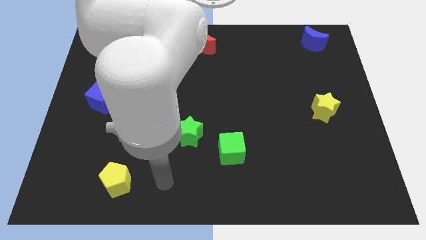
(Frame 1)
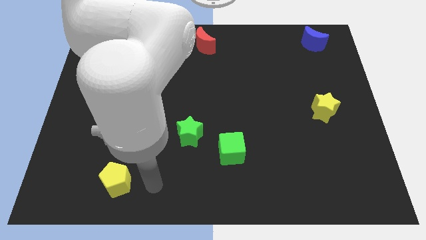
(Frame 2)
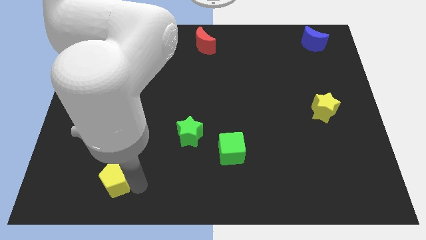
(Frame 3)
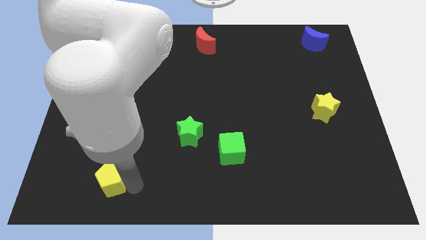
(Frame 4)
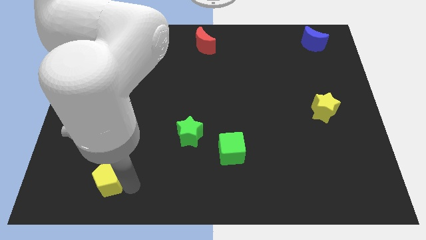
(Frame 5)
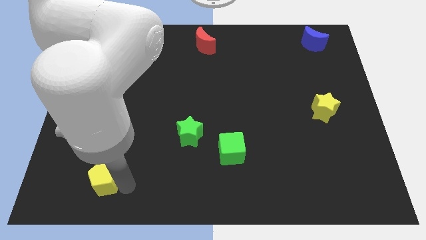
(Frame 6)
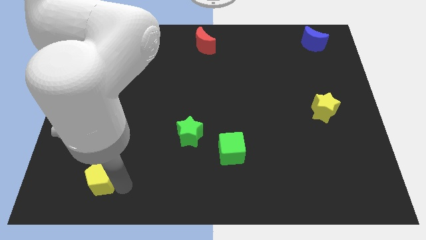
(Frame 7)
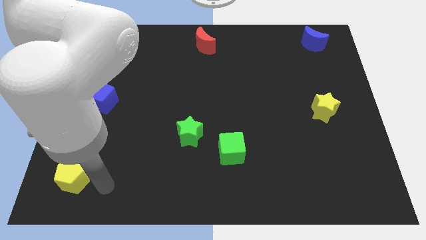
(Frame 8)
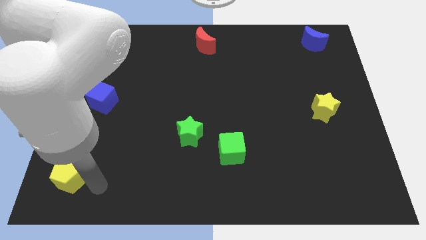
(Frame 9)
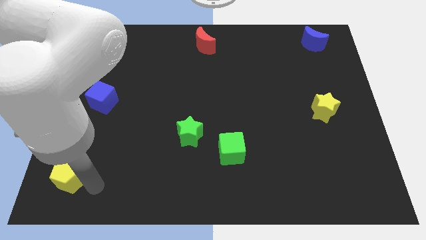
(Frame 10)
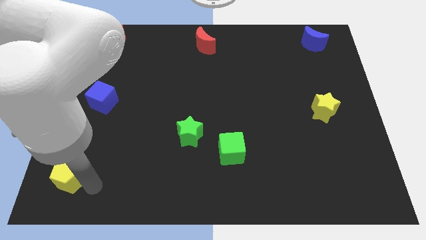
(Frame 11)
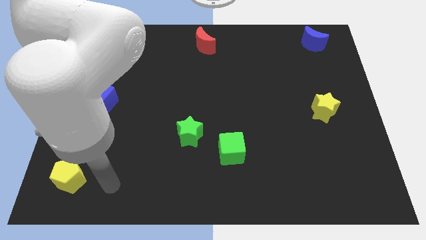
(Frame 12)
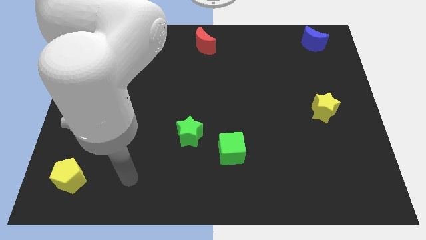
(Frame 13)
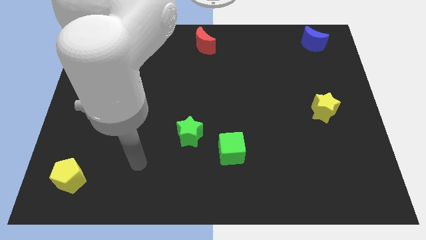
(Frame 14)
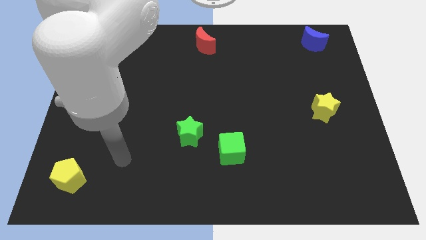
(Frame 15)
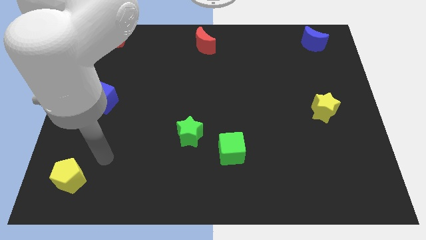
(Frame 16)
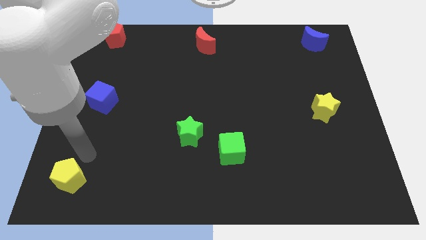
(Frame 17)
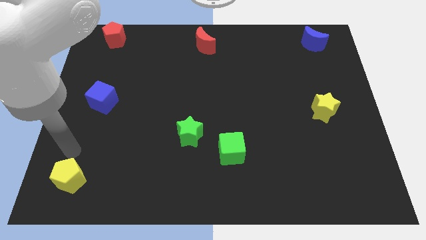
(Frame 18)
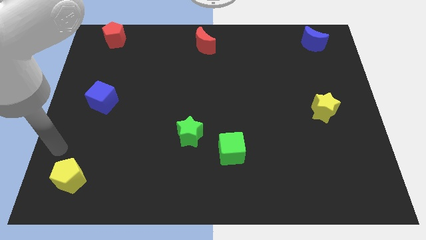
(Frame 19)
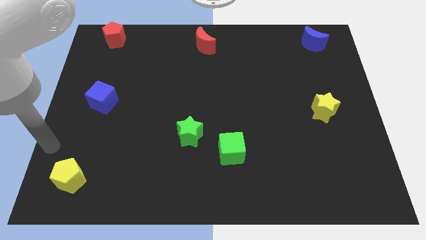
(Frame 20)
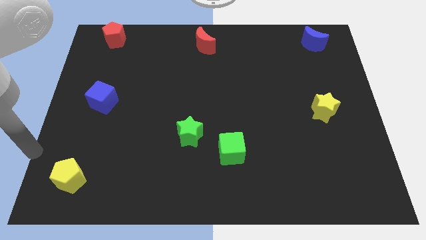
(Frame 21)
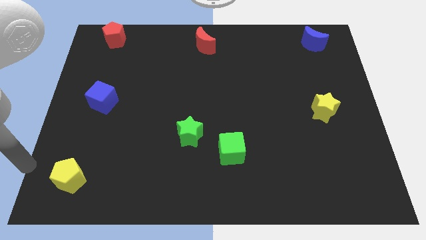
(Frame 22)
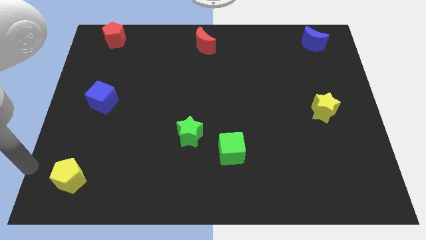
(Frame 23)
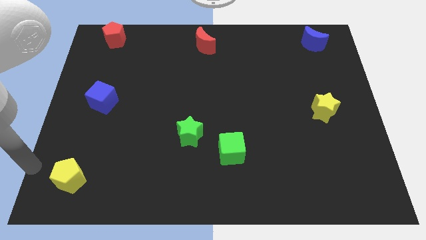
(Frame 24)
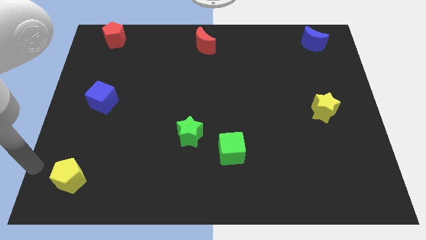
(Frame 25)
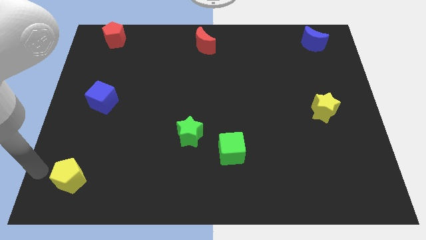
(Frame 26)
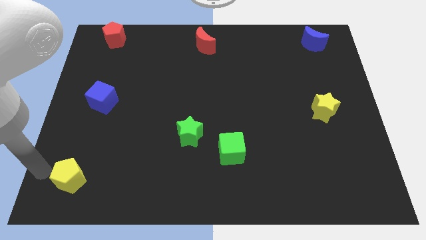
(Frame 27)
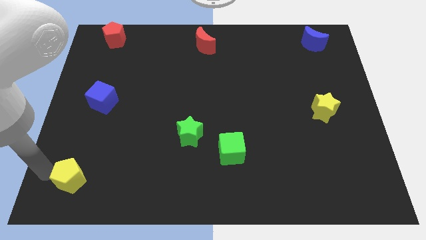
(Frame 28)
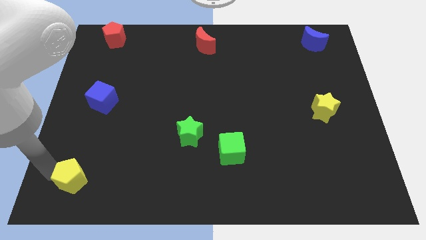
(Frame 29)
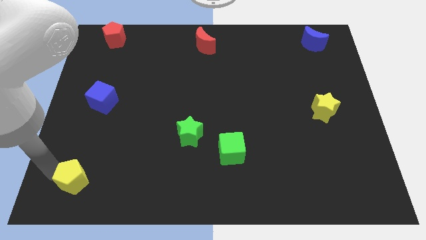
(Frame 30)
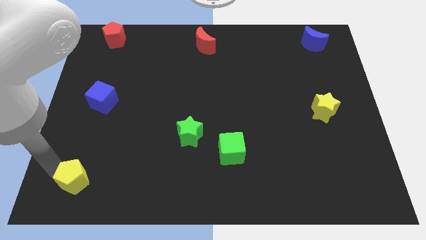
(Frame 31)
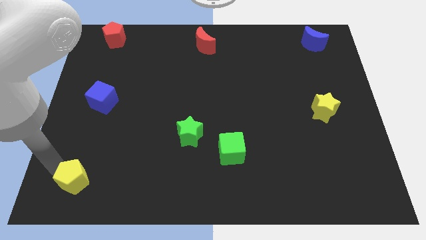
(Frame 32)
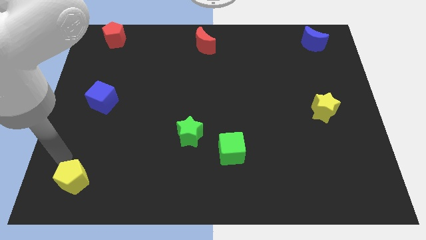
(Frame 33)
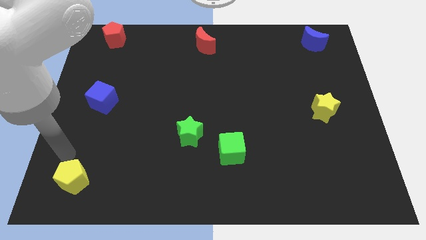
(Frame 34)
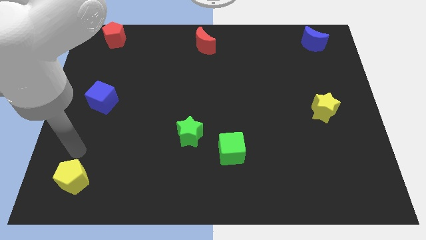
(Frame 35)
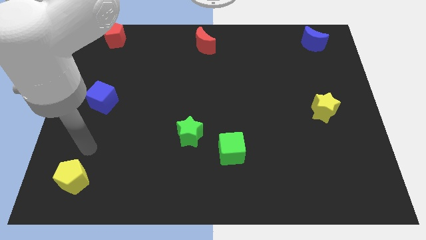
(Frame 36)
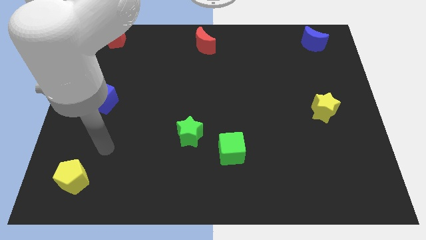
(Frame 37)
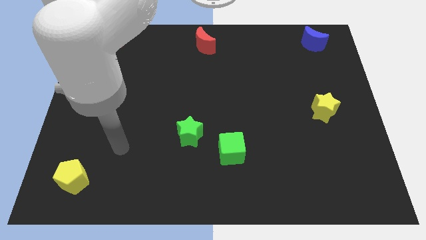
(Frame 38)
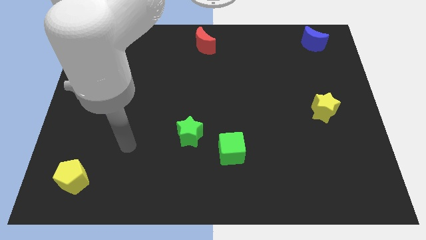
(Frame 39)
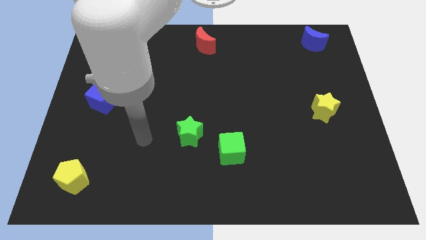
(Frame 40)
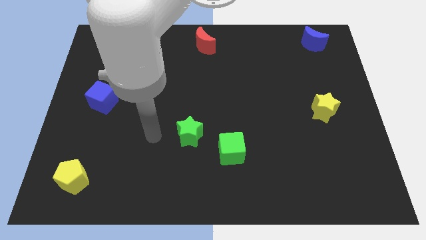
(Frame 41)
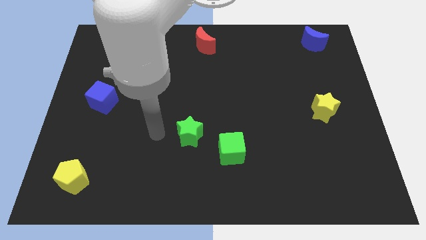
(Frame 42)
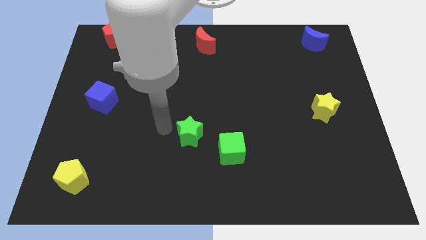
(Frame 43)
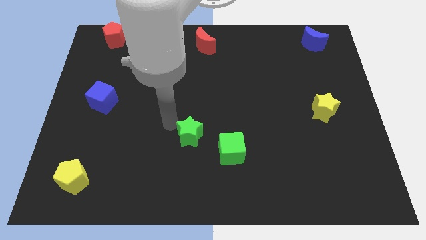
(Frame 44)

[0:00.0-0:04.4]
place yellow pentagon to the left bottom corner

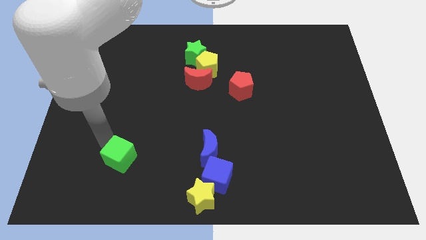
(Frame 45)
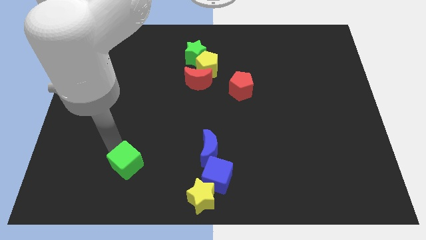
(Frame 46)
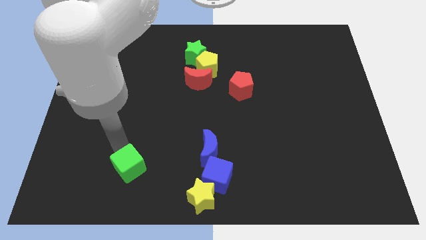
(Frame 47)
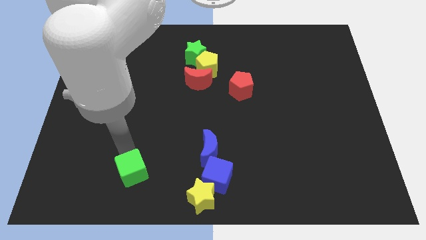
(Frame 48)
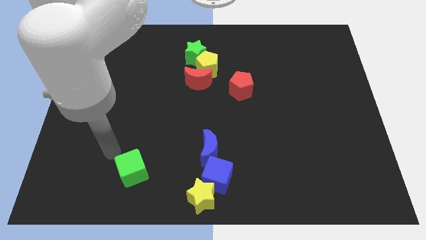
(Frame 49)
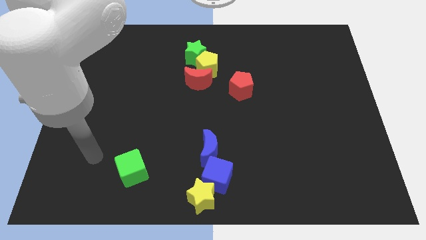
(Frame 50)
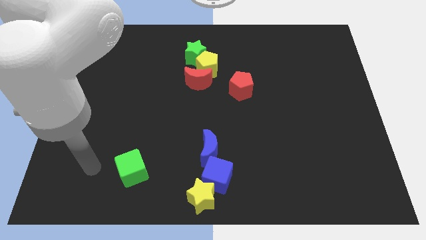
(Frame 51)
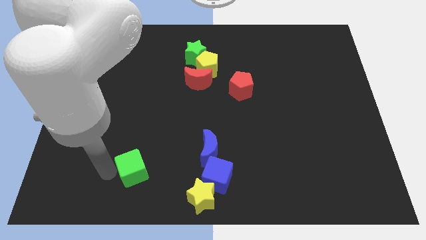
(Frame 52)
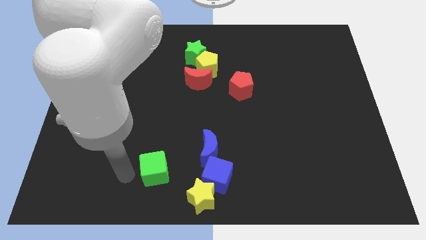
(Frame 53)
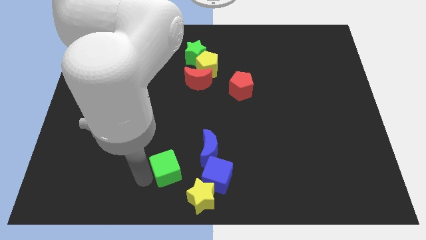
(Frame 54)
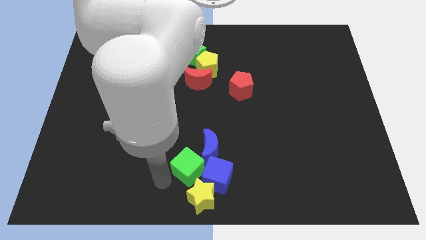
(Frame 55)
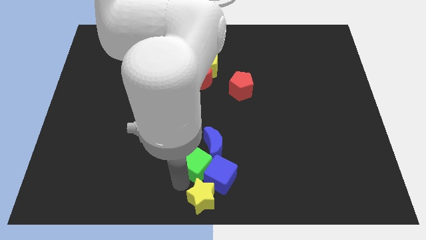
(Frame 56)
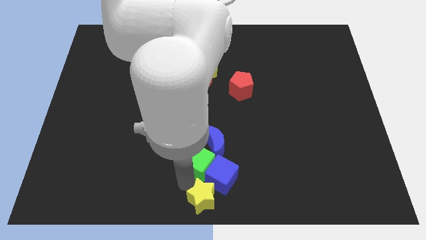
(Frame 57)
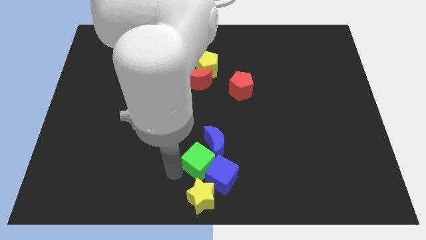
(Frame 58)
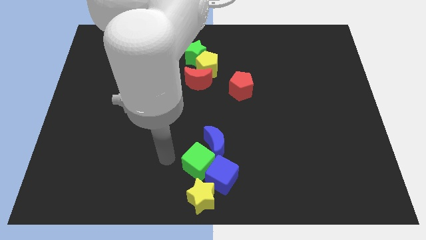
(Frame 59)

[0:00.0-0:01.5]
push the green cube into the blue cube

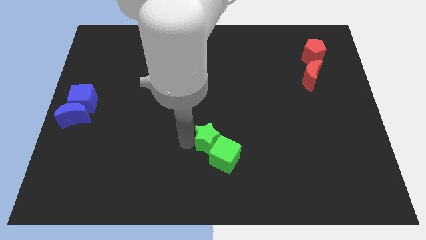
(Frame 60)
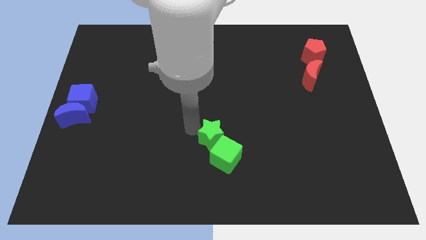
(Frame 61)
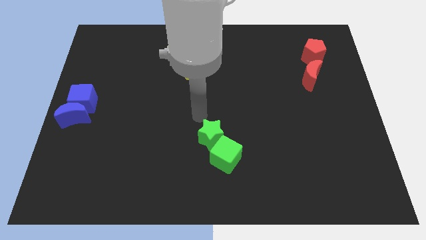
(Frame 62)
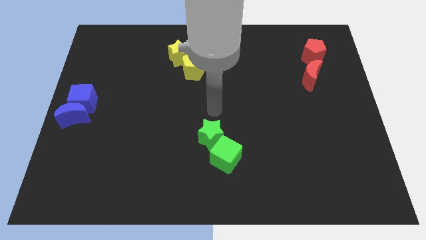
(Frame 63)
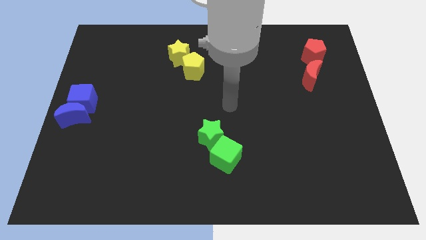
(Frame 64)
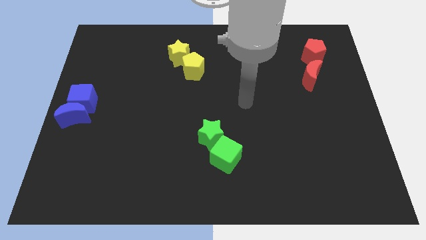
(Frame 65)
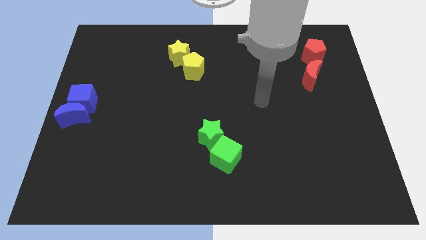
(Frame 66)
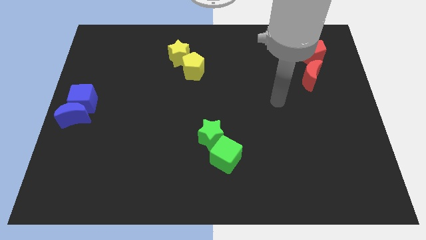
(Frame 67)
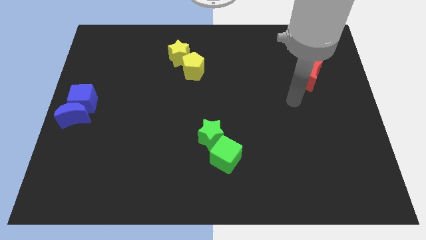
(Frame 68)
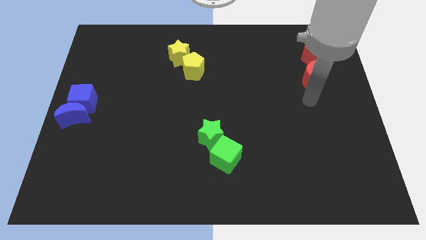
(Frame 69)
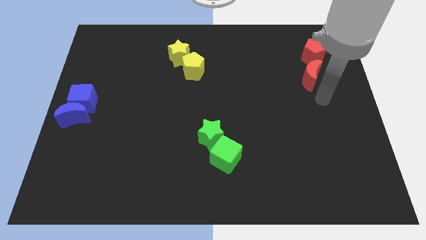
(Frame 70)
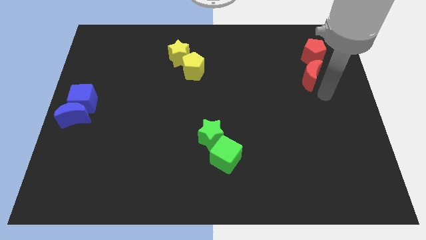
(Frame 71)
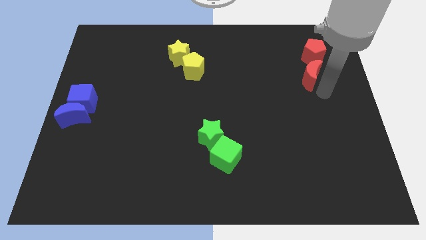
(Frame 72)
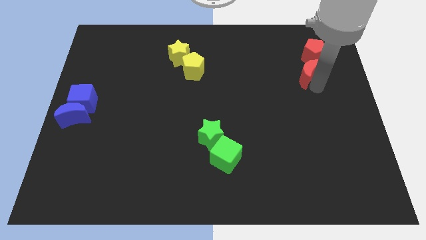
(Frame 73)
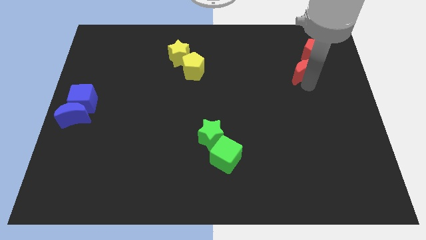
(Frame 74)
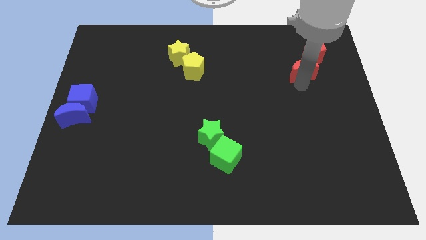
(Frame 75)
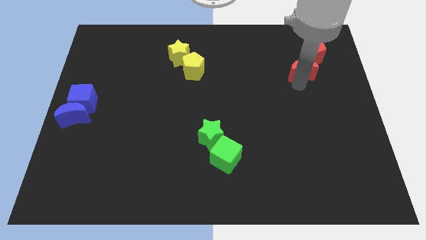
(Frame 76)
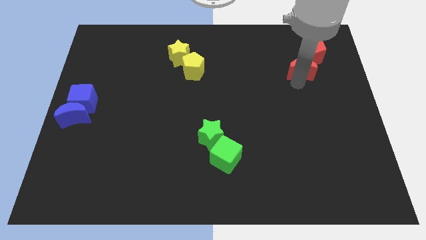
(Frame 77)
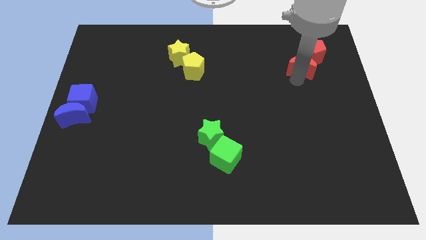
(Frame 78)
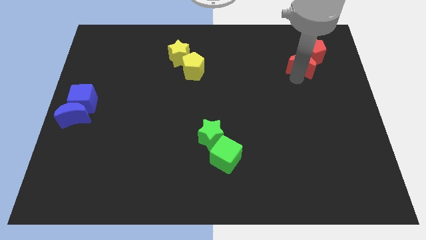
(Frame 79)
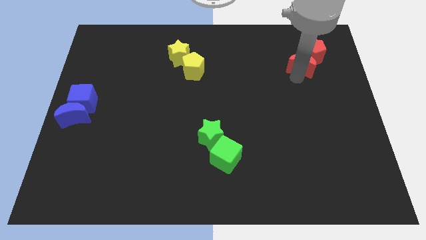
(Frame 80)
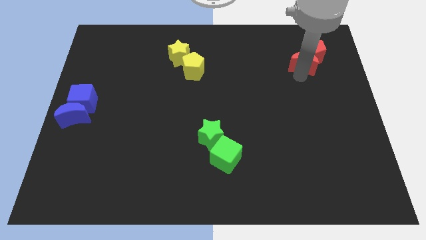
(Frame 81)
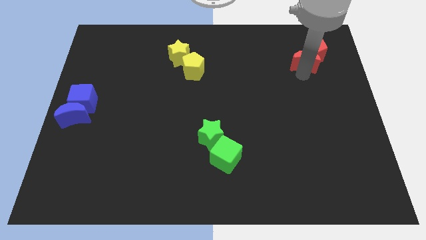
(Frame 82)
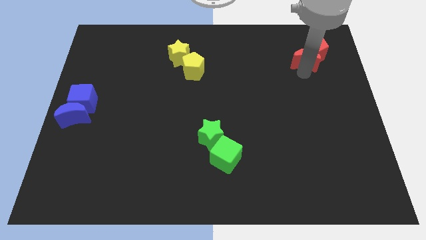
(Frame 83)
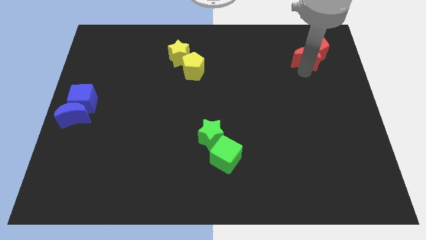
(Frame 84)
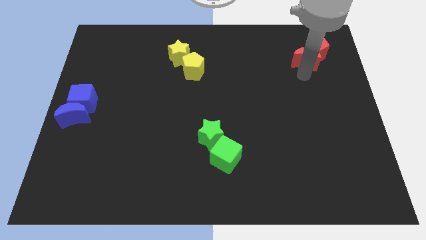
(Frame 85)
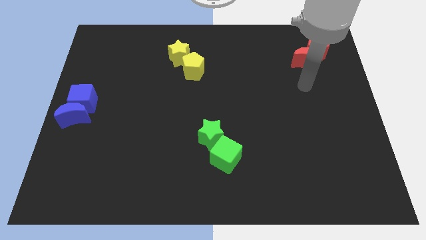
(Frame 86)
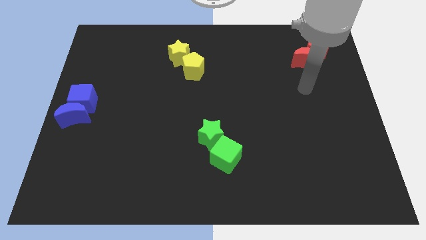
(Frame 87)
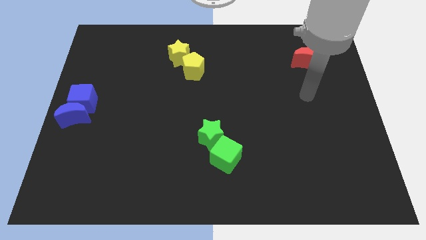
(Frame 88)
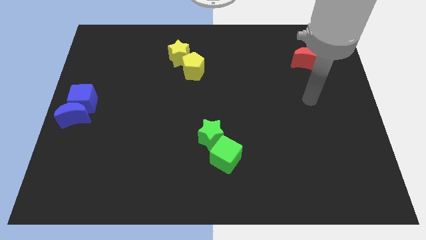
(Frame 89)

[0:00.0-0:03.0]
push red crescent and red pentagon towards right top of the board
